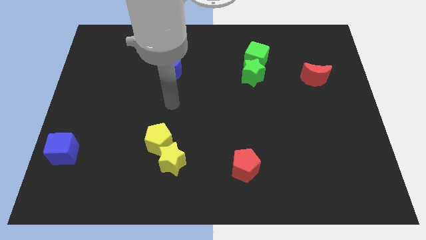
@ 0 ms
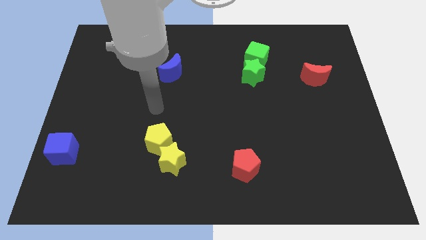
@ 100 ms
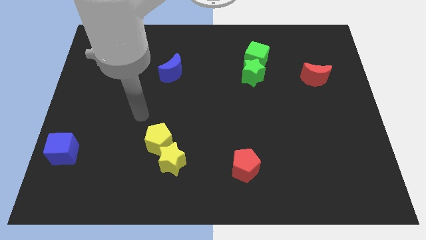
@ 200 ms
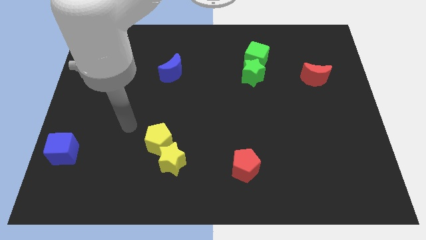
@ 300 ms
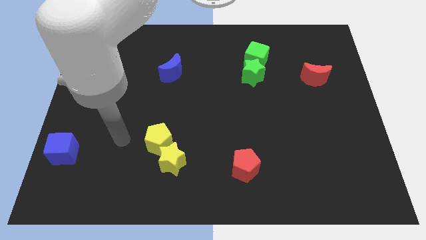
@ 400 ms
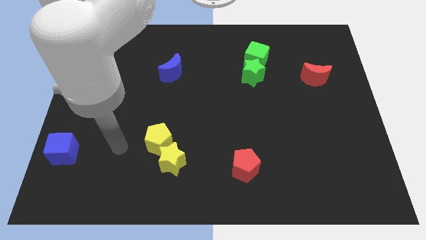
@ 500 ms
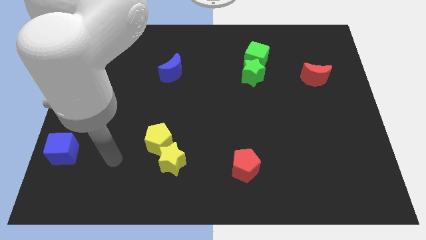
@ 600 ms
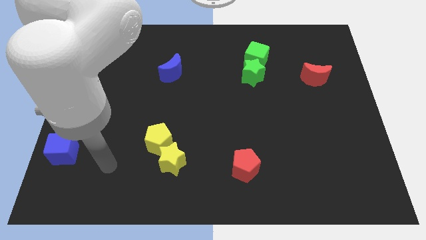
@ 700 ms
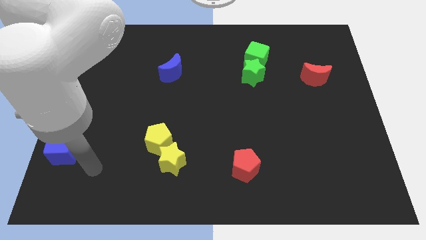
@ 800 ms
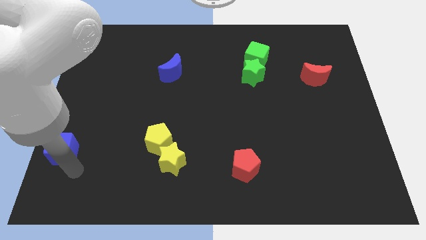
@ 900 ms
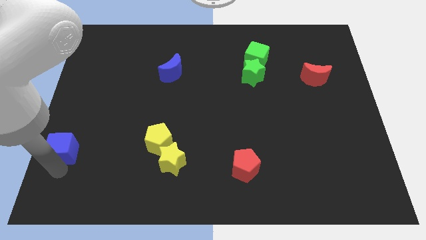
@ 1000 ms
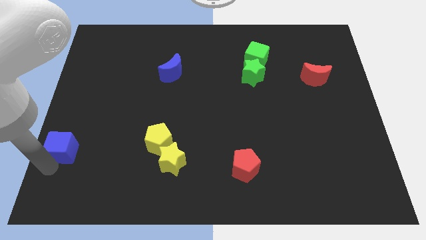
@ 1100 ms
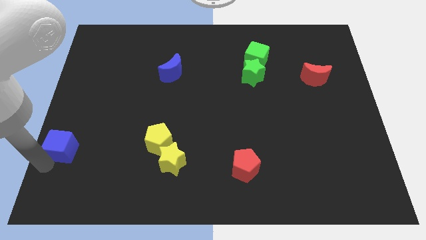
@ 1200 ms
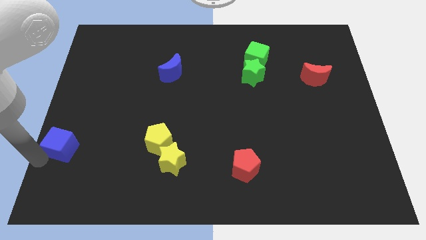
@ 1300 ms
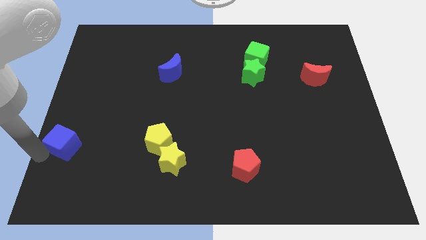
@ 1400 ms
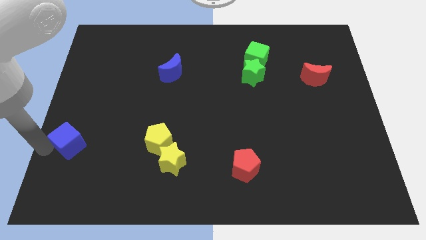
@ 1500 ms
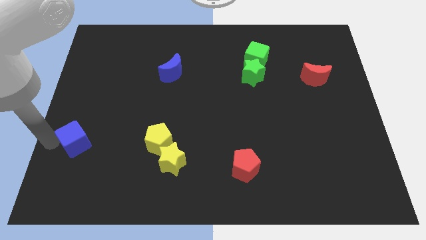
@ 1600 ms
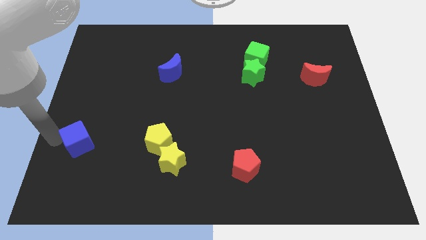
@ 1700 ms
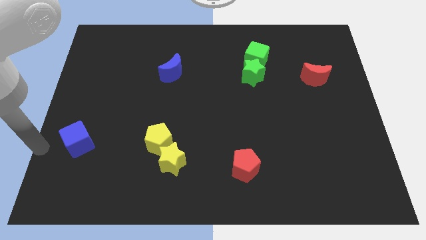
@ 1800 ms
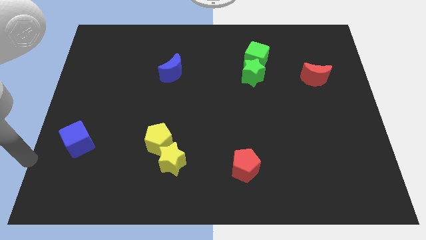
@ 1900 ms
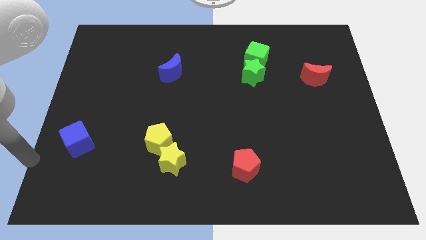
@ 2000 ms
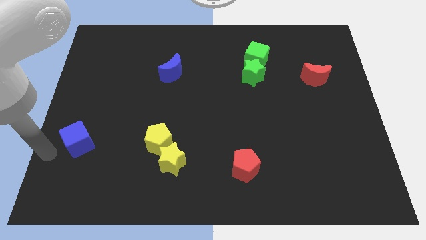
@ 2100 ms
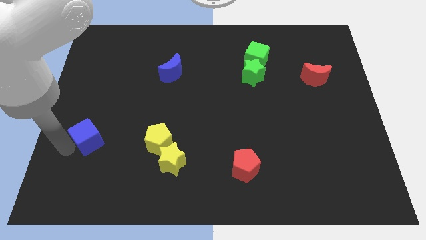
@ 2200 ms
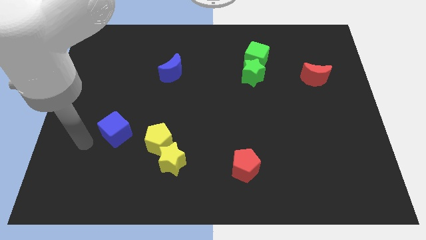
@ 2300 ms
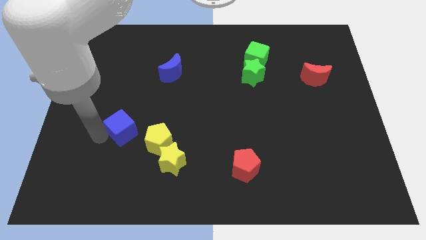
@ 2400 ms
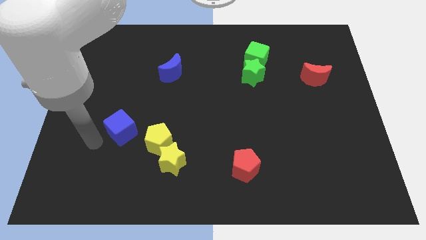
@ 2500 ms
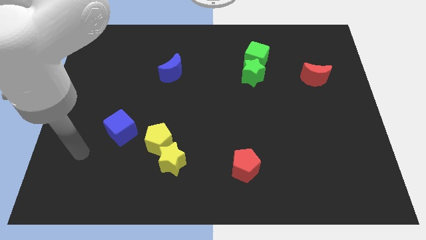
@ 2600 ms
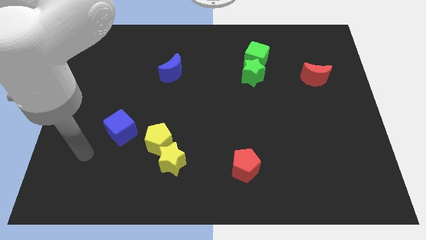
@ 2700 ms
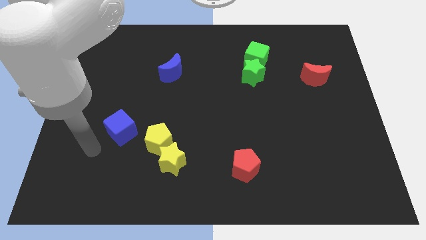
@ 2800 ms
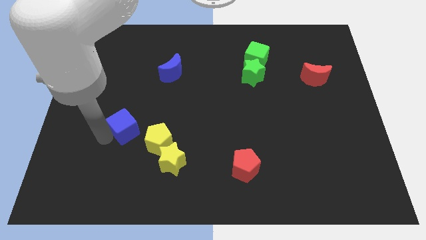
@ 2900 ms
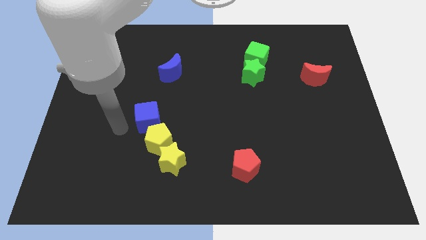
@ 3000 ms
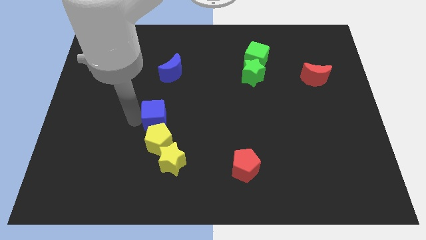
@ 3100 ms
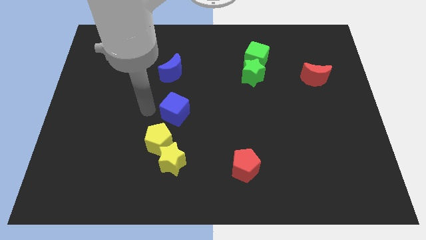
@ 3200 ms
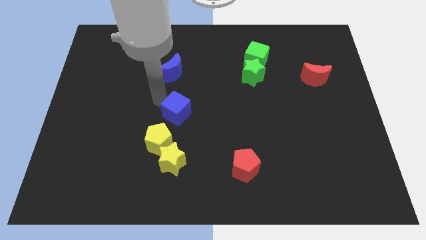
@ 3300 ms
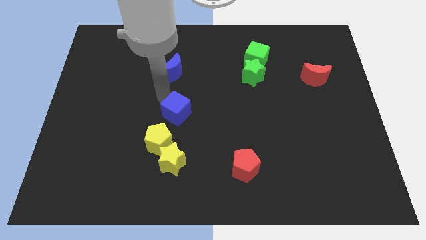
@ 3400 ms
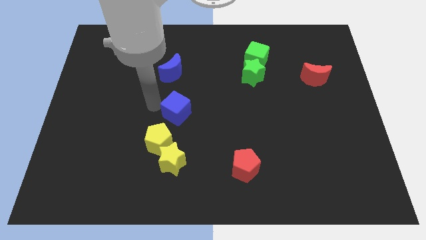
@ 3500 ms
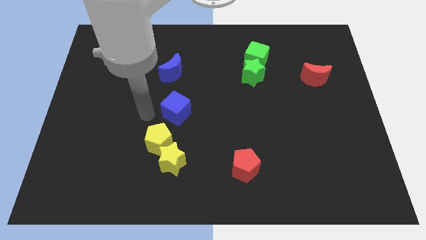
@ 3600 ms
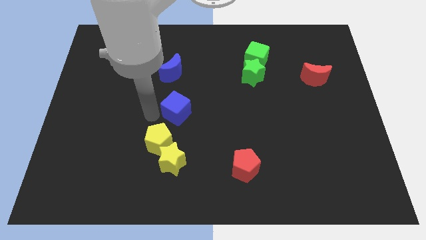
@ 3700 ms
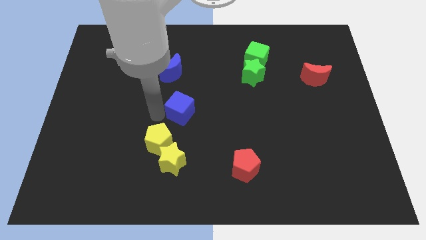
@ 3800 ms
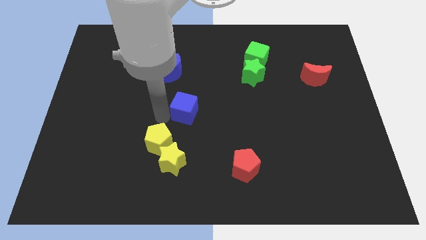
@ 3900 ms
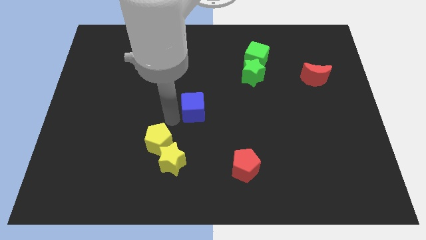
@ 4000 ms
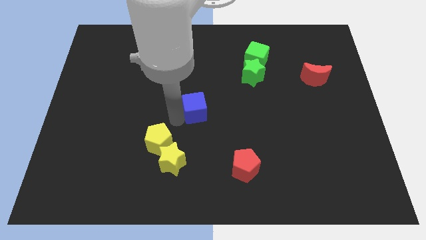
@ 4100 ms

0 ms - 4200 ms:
place the blue cube in between the red pentagon and blue moon

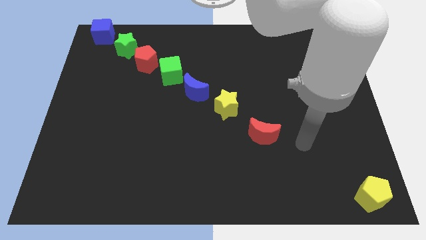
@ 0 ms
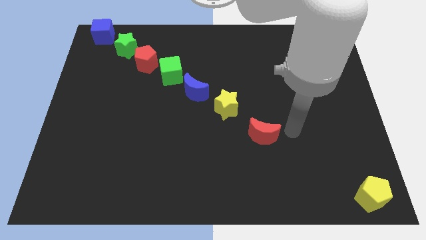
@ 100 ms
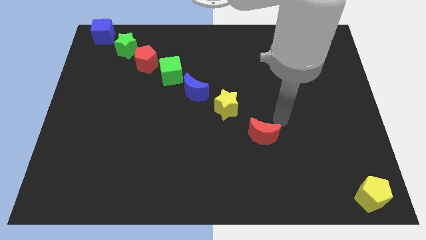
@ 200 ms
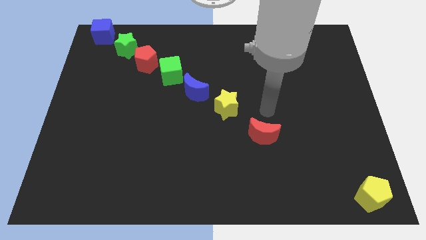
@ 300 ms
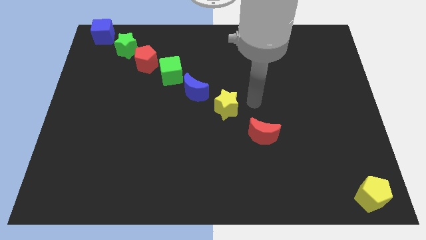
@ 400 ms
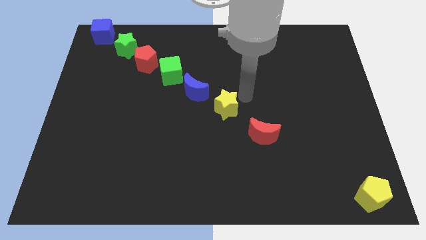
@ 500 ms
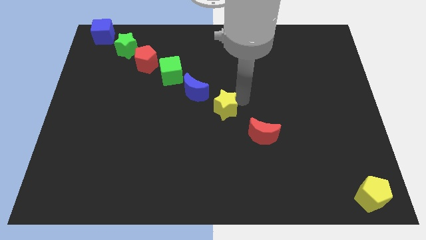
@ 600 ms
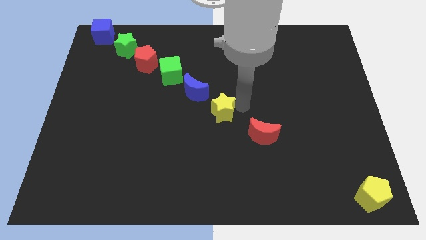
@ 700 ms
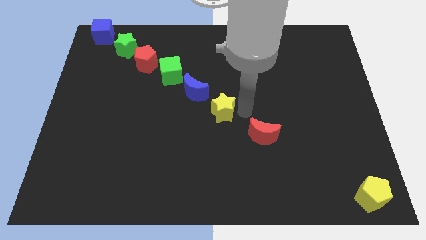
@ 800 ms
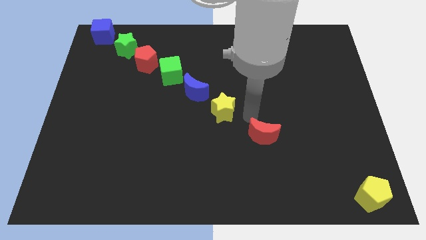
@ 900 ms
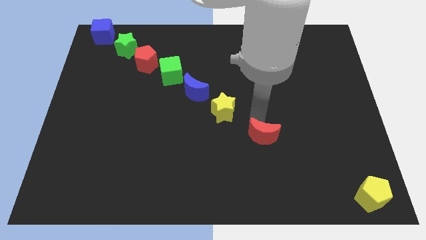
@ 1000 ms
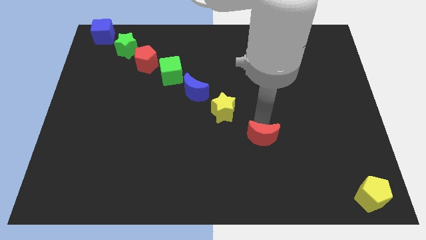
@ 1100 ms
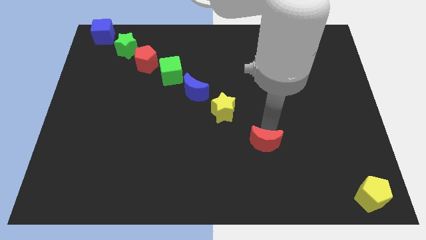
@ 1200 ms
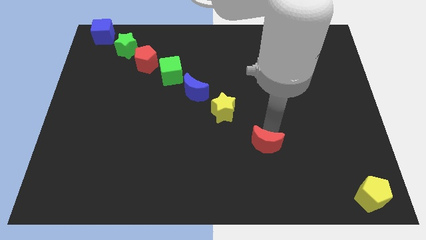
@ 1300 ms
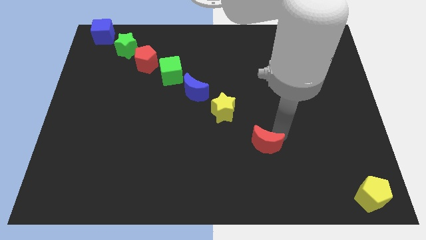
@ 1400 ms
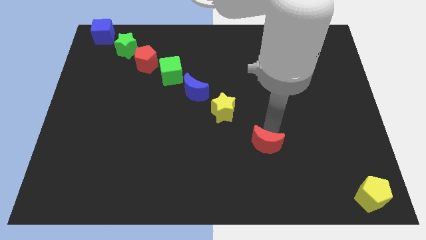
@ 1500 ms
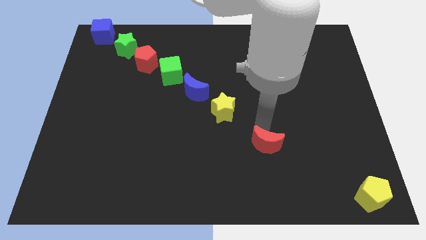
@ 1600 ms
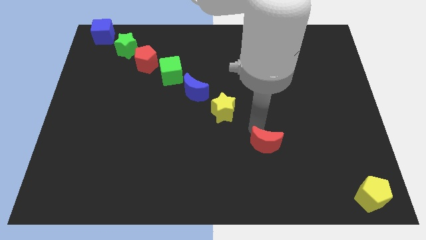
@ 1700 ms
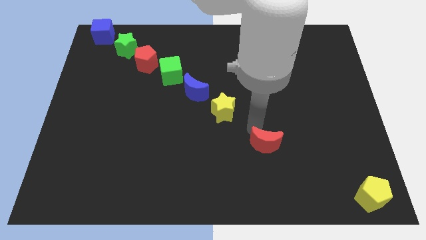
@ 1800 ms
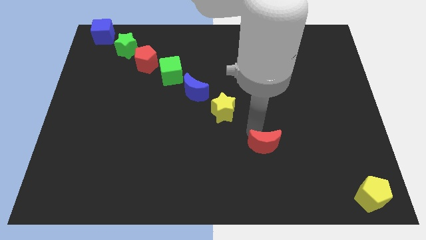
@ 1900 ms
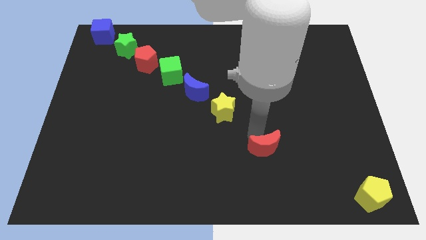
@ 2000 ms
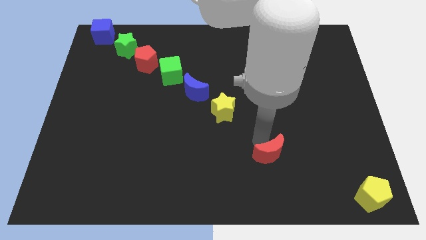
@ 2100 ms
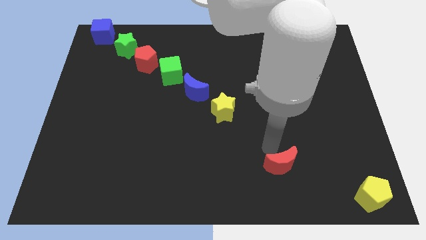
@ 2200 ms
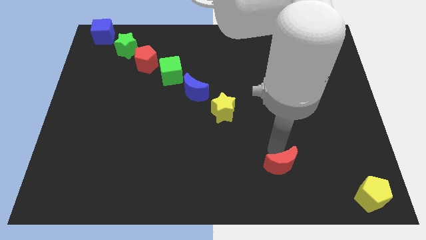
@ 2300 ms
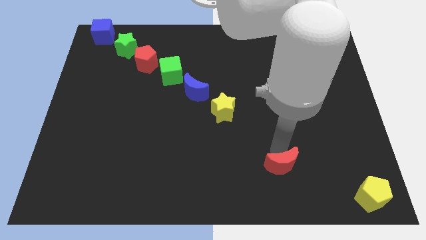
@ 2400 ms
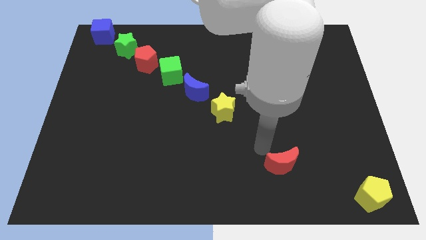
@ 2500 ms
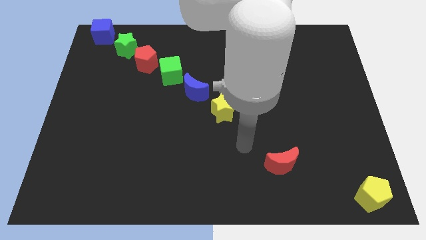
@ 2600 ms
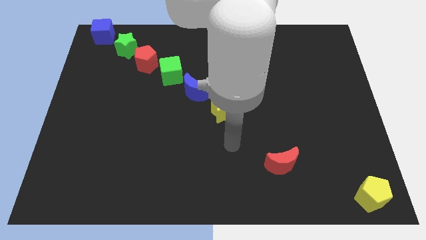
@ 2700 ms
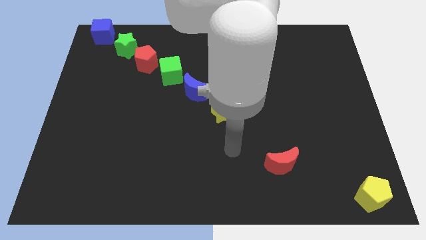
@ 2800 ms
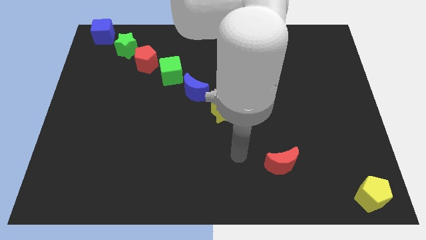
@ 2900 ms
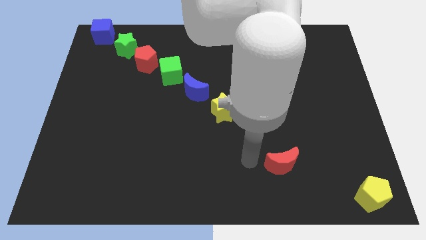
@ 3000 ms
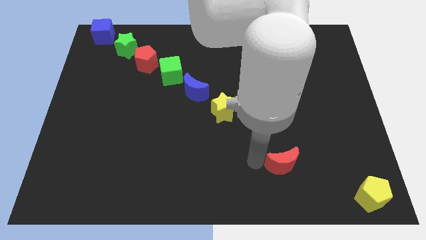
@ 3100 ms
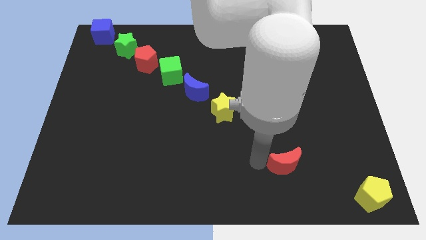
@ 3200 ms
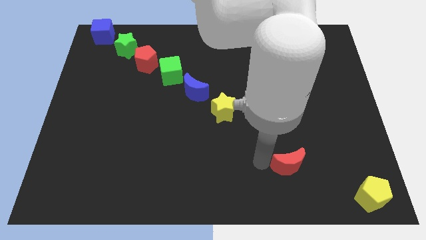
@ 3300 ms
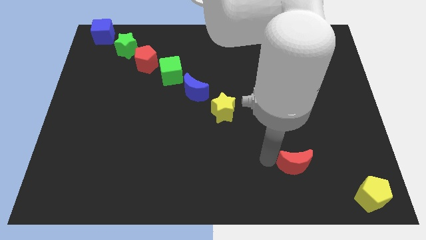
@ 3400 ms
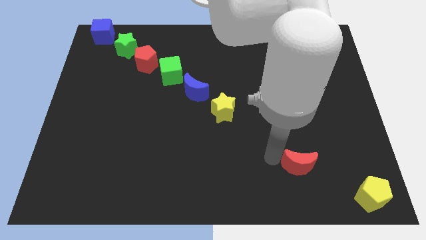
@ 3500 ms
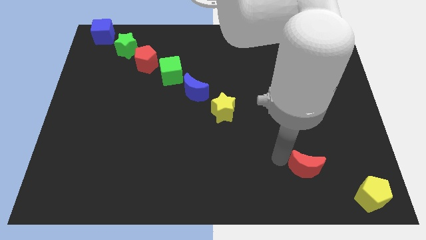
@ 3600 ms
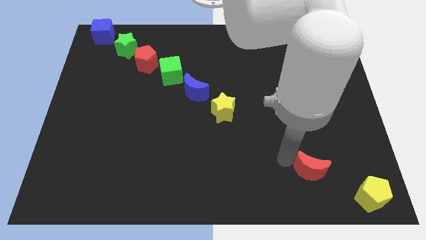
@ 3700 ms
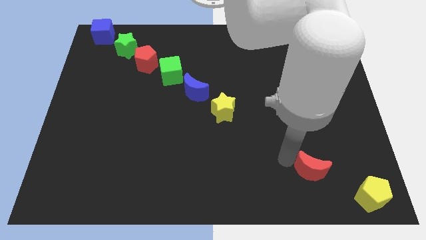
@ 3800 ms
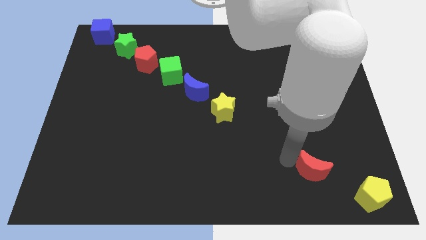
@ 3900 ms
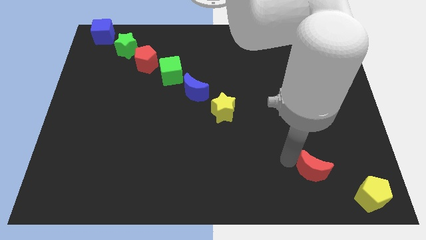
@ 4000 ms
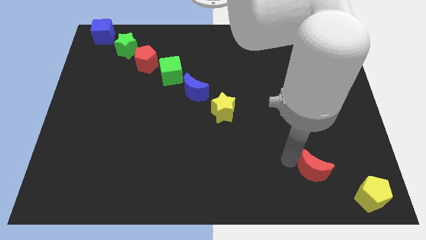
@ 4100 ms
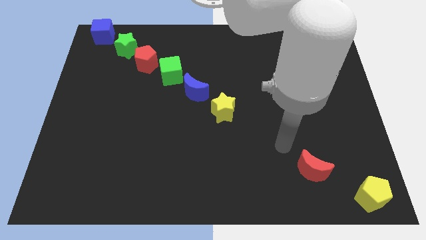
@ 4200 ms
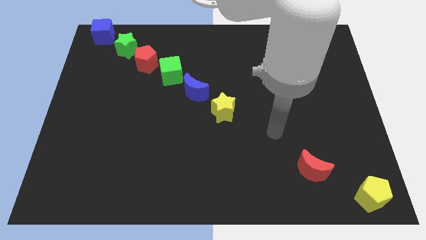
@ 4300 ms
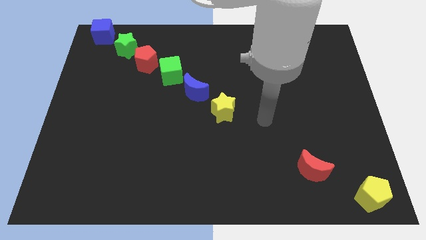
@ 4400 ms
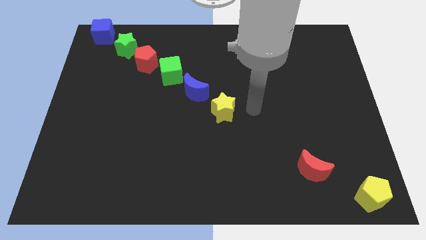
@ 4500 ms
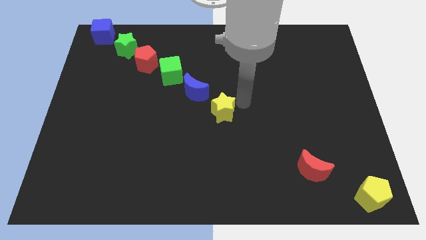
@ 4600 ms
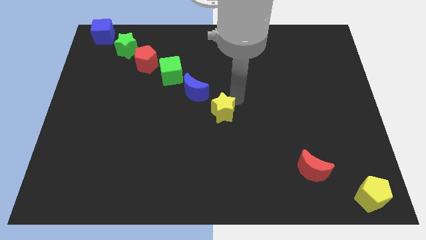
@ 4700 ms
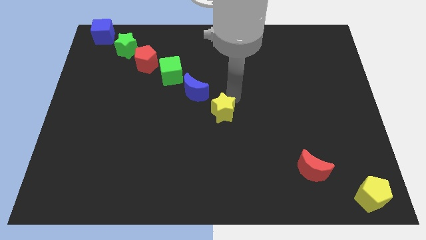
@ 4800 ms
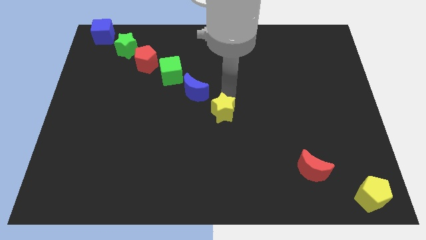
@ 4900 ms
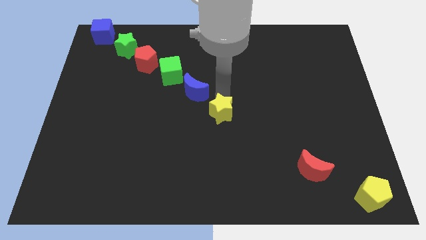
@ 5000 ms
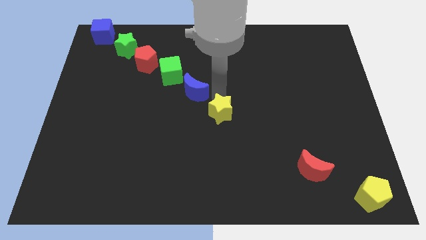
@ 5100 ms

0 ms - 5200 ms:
move the red moon diagonally above the yellow pentagon
